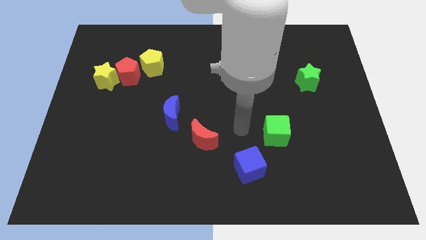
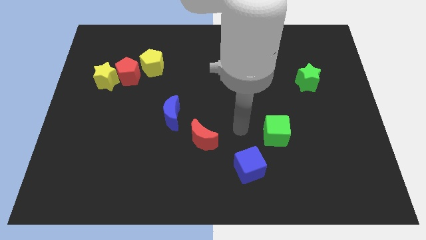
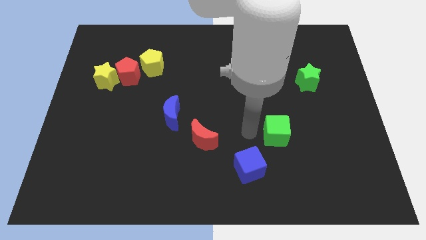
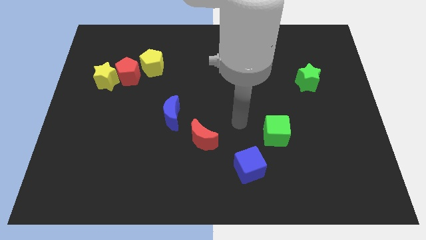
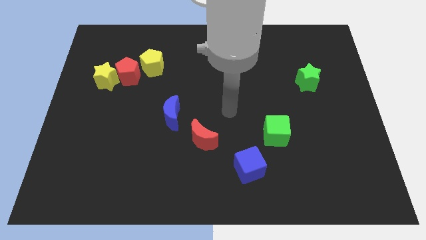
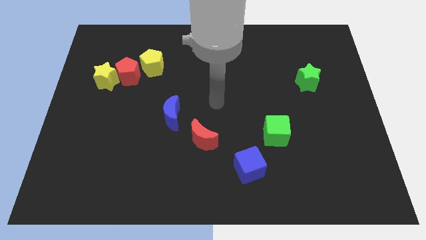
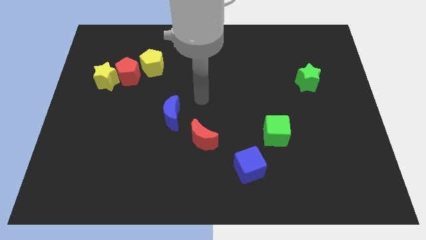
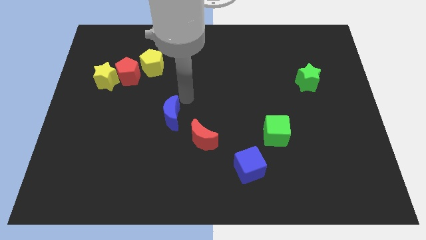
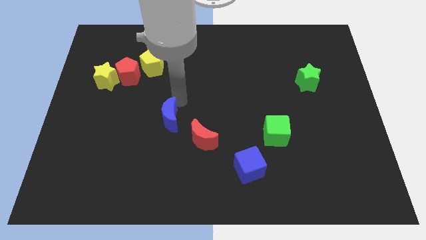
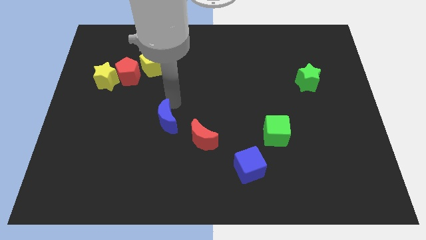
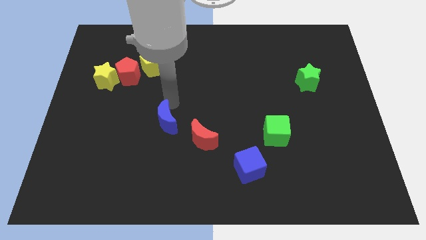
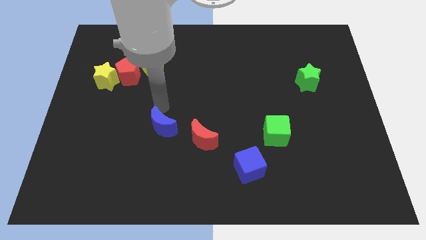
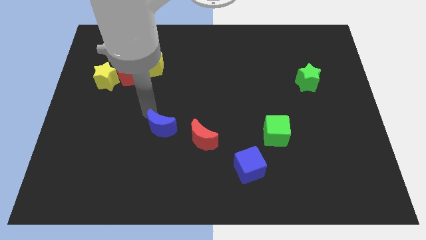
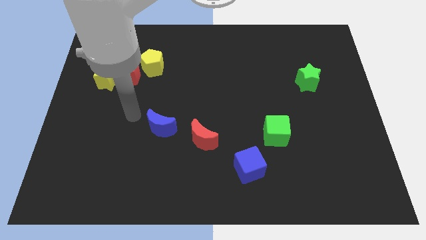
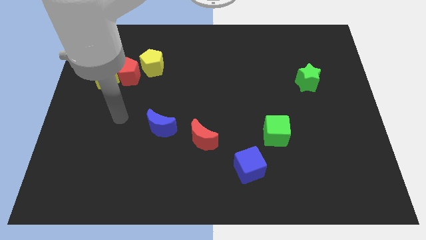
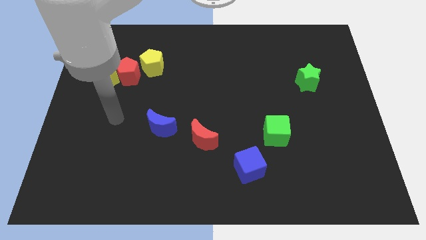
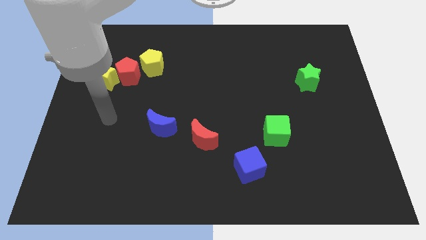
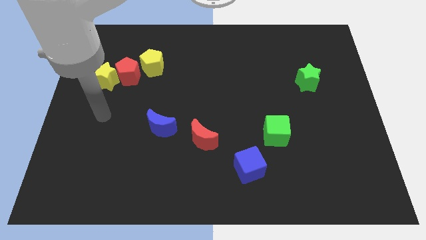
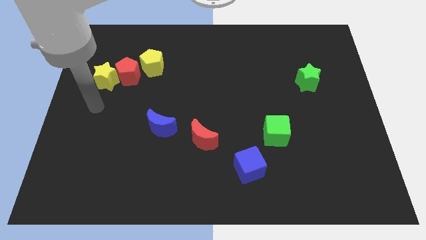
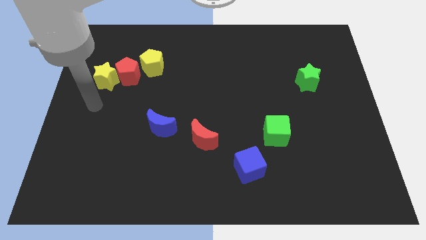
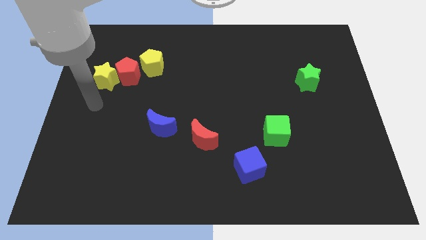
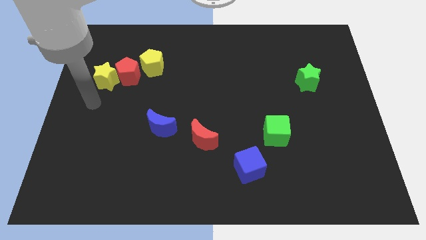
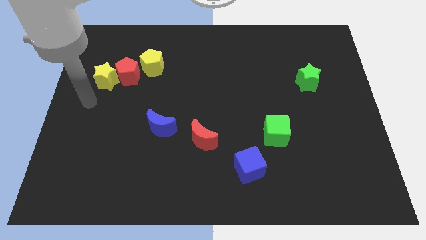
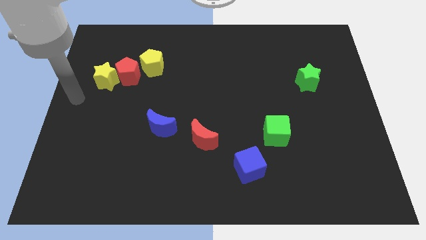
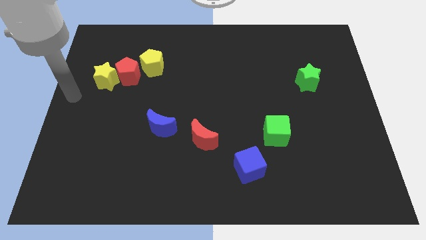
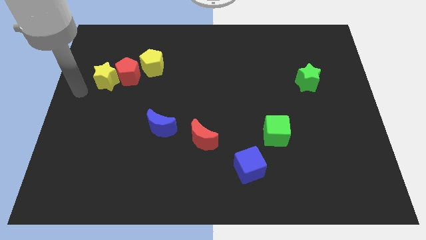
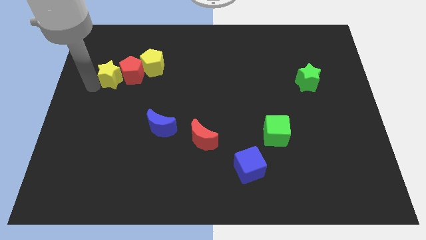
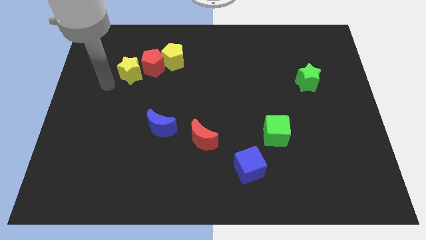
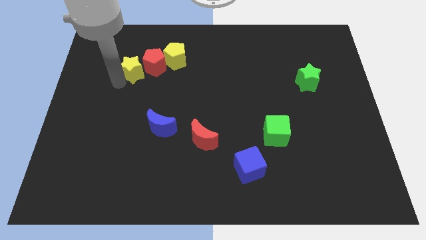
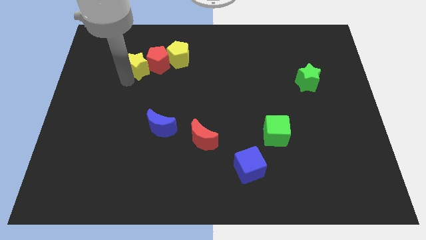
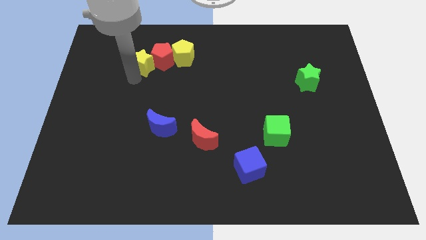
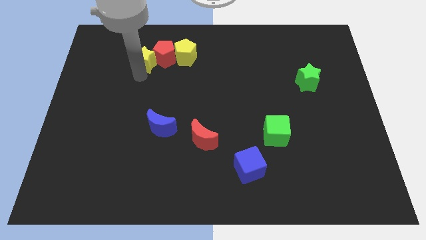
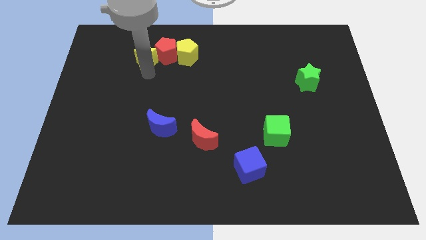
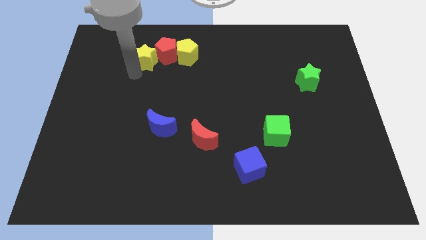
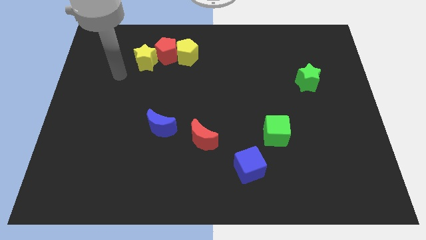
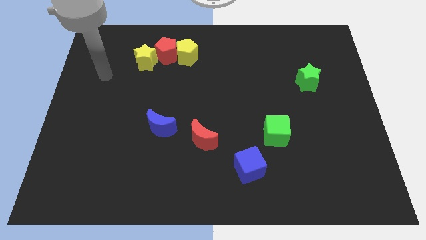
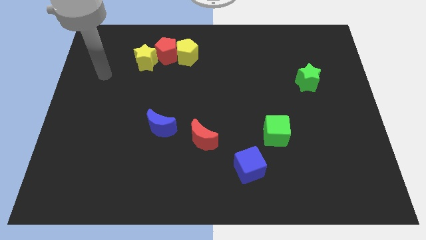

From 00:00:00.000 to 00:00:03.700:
move the yellow blocks and the red pentagon vertically above the blue moon

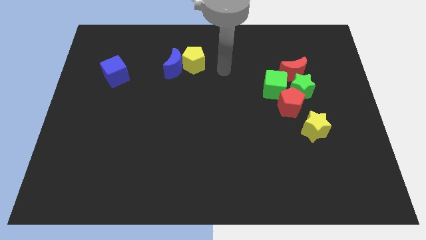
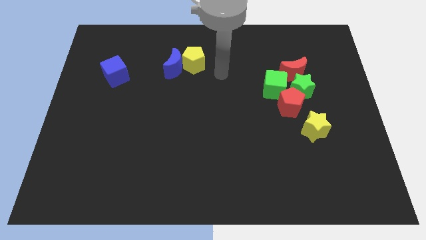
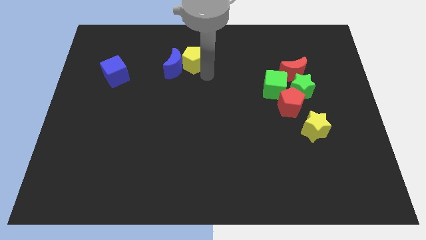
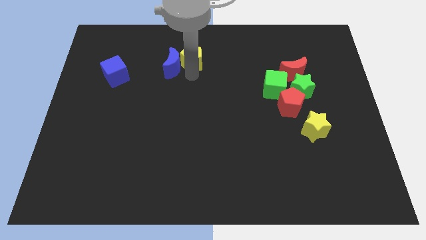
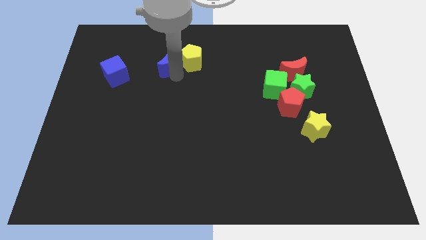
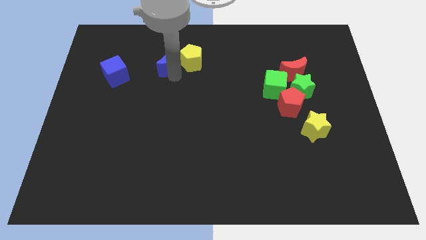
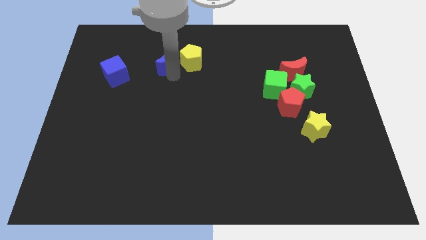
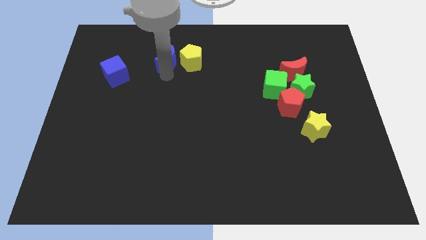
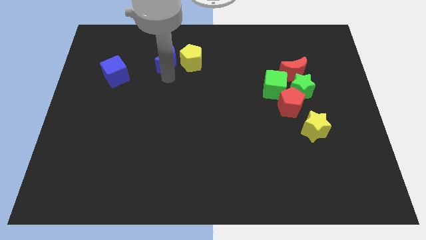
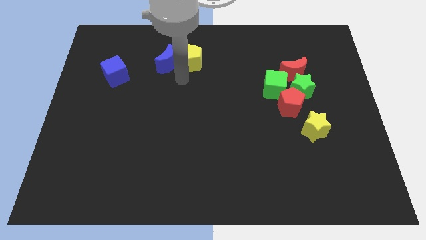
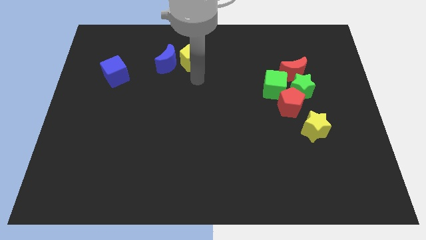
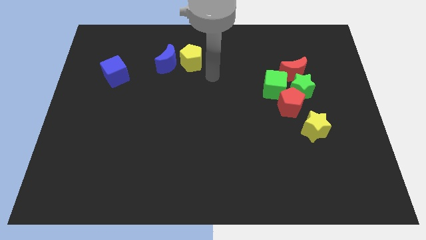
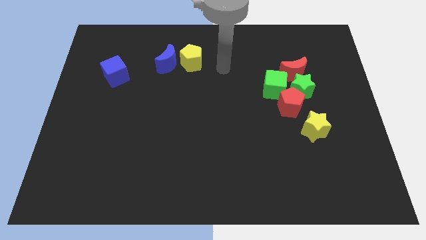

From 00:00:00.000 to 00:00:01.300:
separate the blue crescent from the yellow pentagon

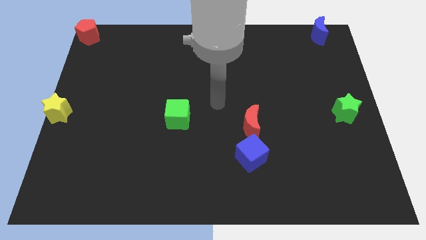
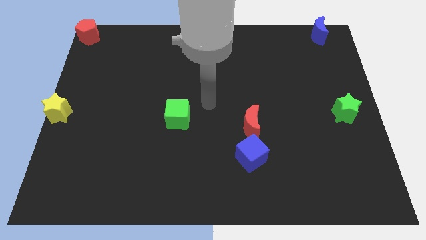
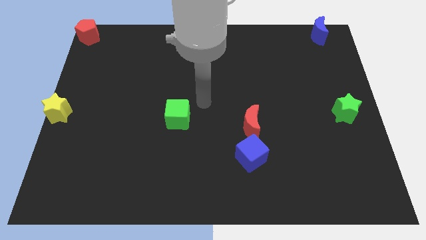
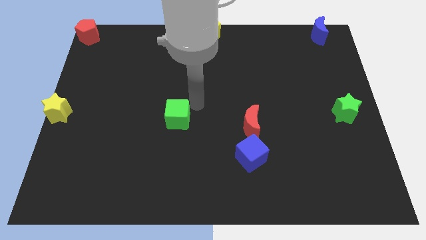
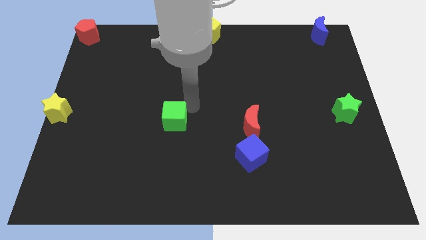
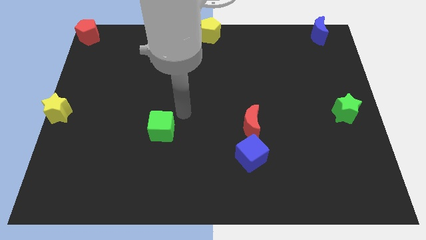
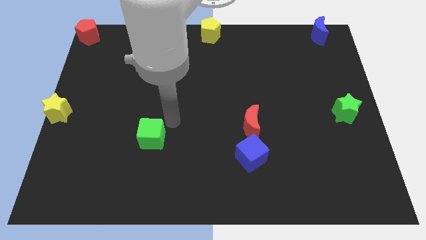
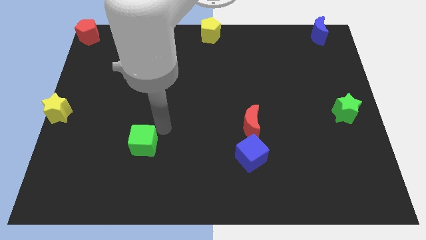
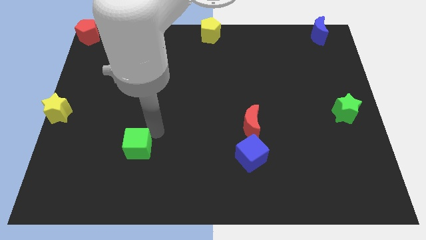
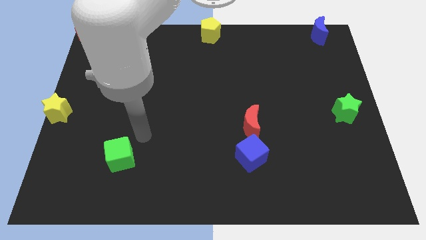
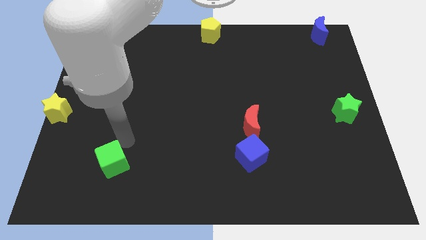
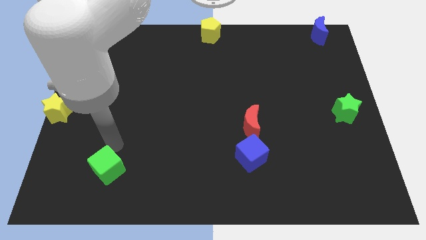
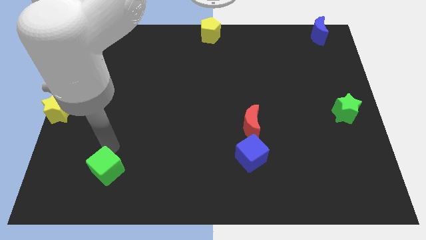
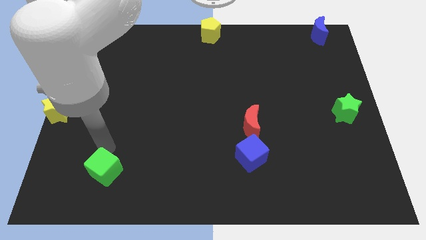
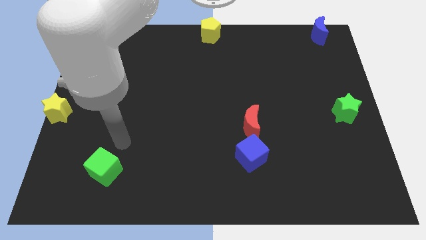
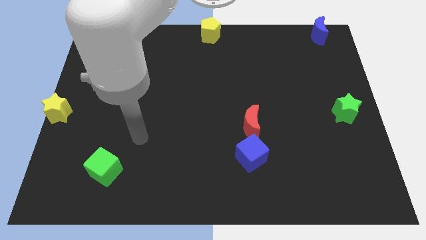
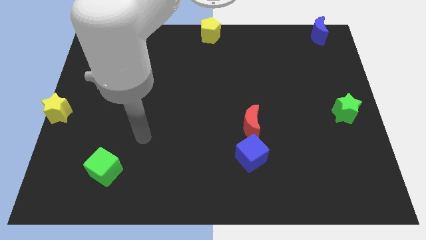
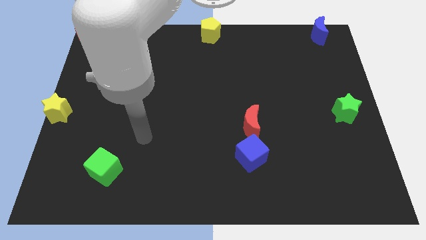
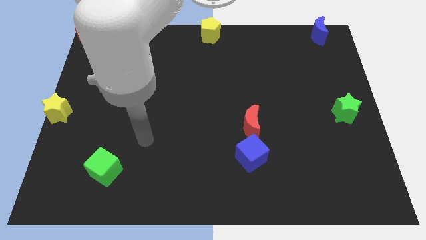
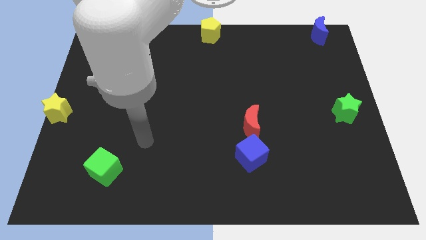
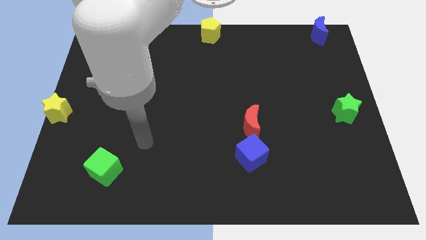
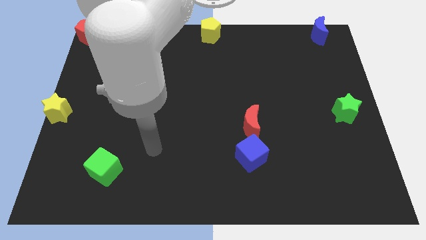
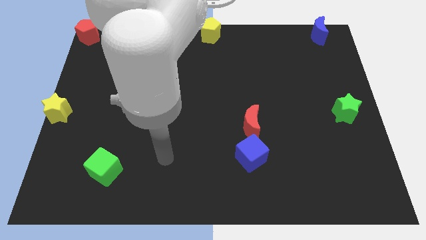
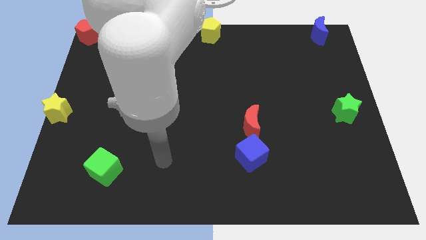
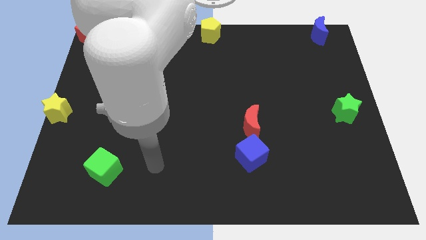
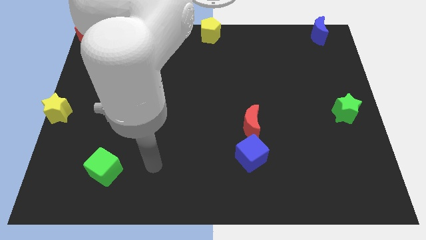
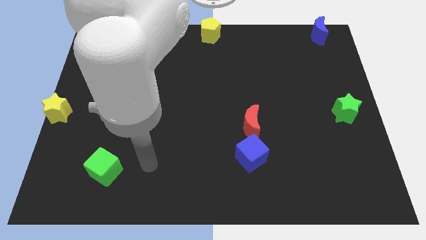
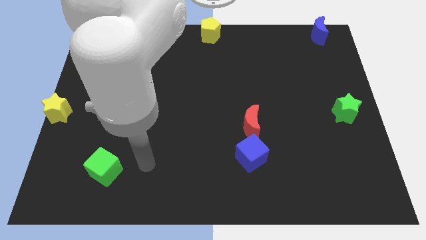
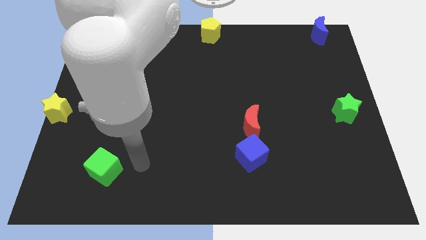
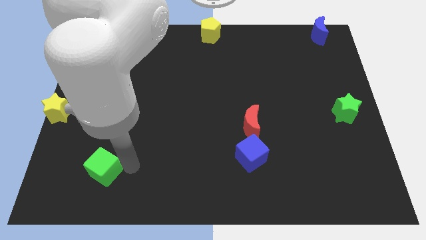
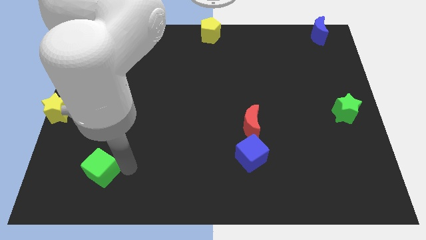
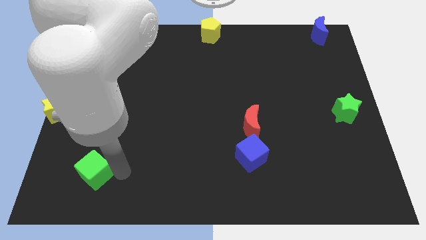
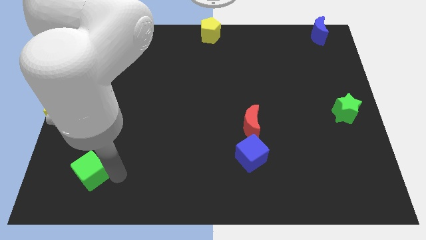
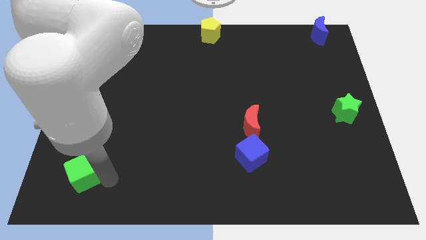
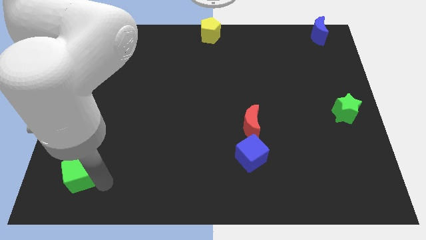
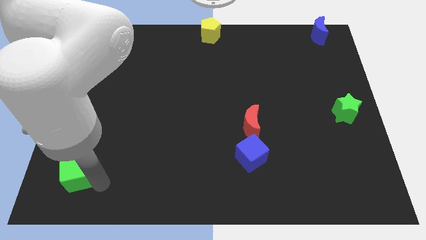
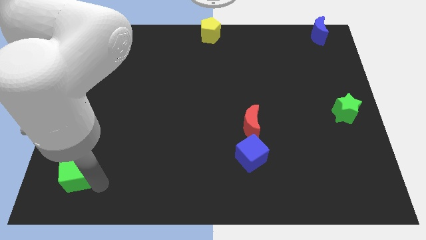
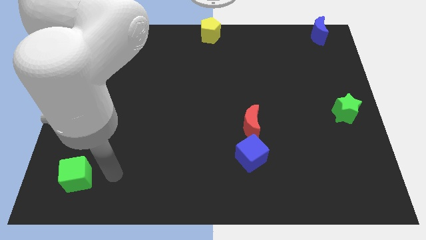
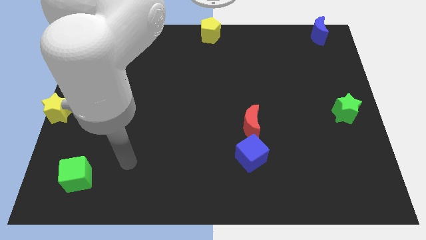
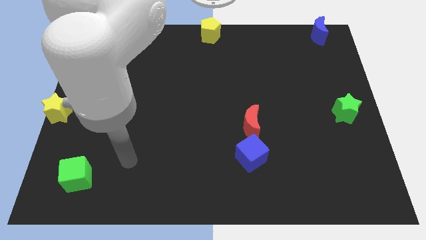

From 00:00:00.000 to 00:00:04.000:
slightly push the green cube downward

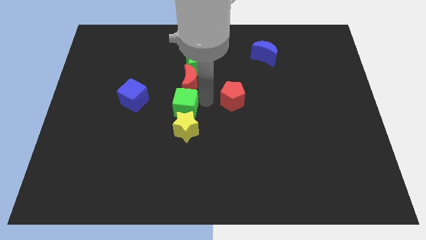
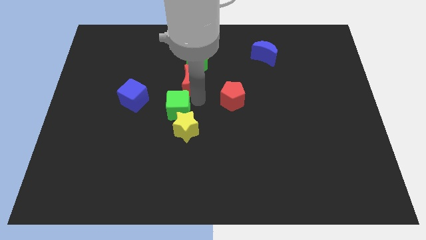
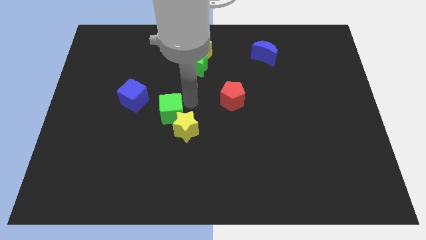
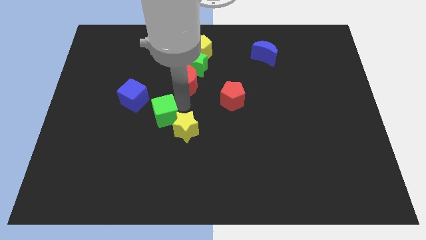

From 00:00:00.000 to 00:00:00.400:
place the green cube in between the blue cube and yellow star
